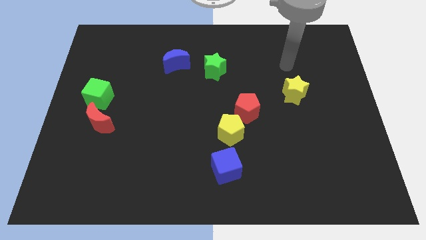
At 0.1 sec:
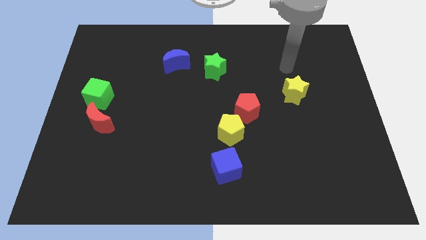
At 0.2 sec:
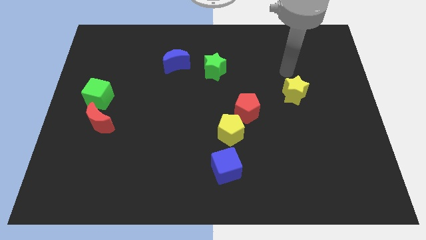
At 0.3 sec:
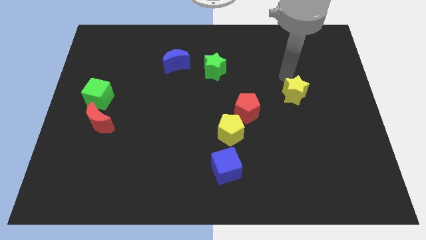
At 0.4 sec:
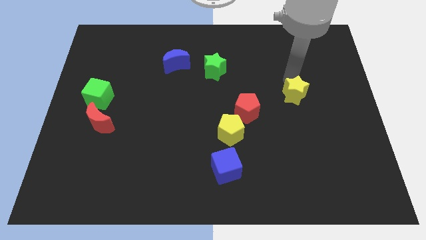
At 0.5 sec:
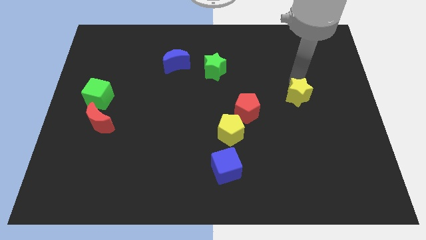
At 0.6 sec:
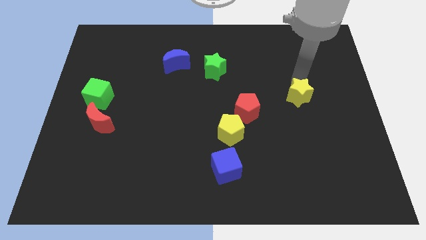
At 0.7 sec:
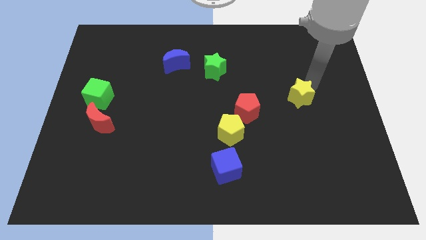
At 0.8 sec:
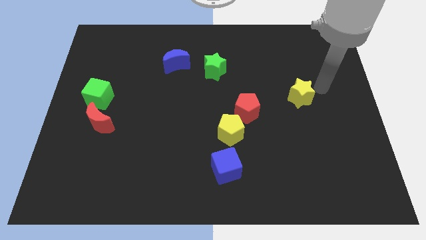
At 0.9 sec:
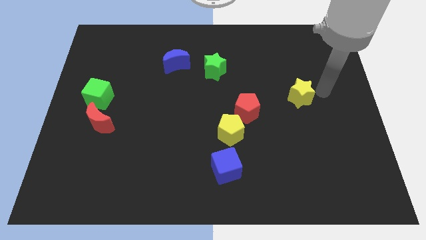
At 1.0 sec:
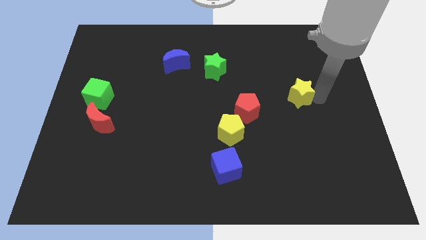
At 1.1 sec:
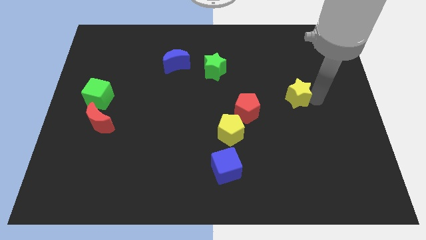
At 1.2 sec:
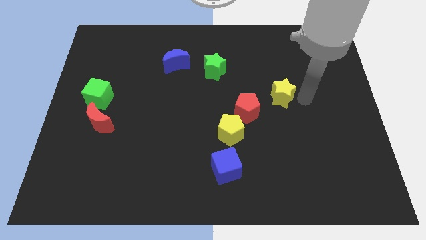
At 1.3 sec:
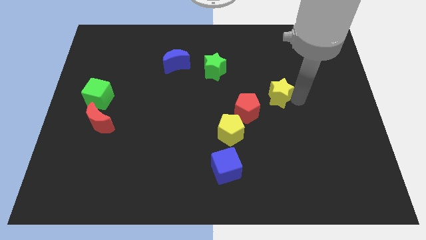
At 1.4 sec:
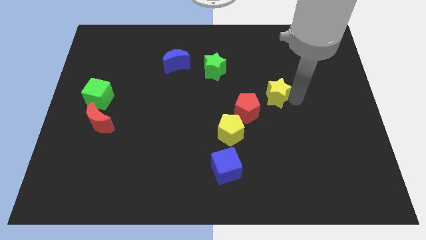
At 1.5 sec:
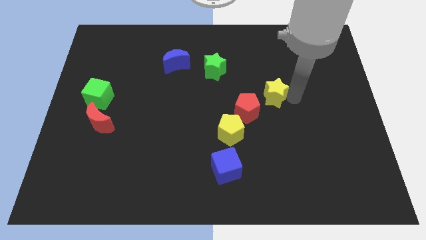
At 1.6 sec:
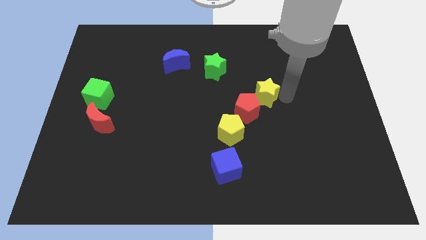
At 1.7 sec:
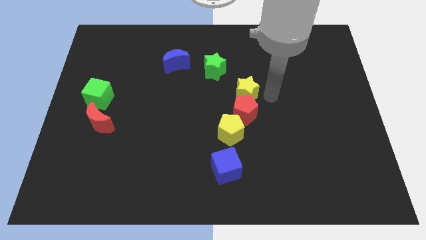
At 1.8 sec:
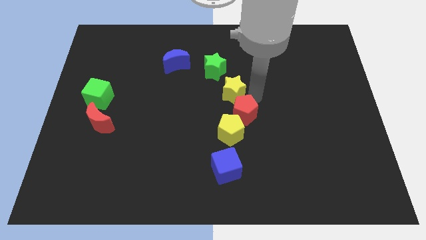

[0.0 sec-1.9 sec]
push the yellow star to the top of red pentagon

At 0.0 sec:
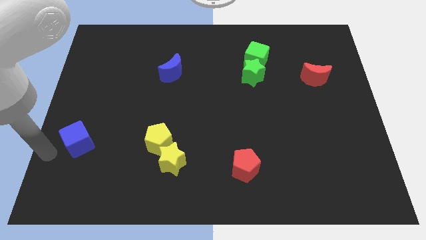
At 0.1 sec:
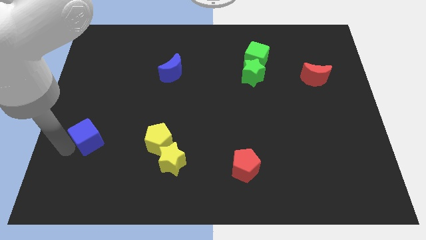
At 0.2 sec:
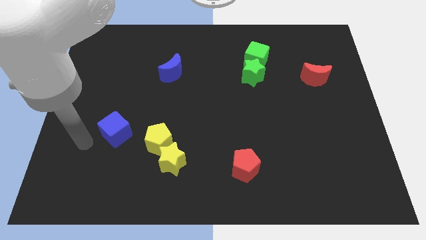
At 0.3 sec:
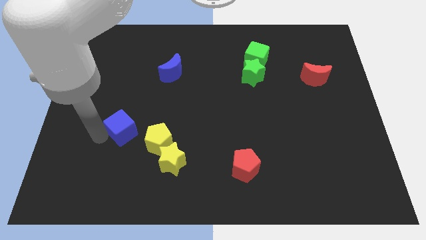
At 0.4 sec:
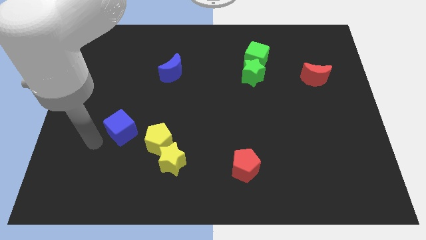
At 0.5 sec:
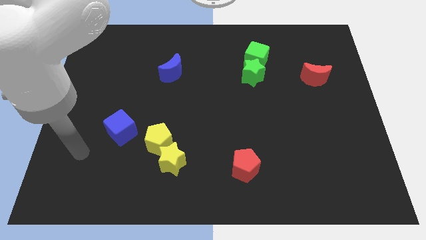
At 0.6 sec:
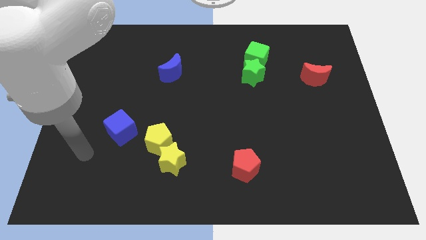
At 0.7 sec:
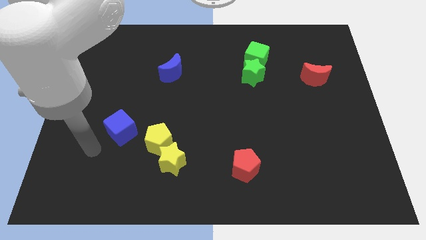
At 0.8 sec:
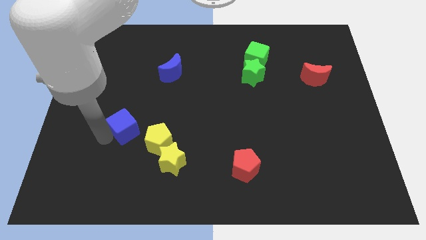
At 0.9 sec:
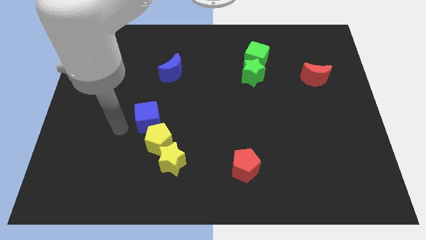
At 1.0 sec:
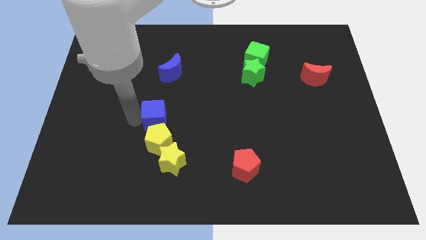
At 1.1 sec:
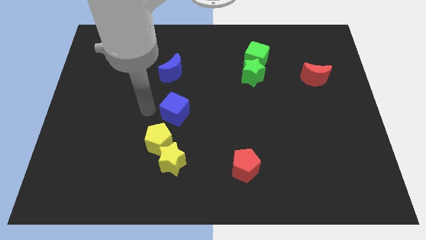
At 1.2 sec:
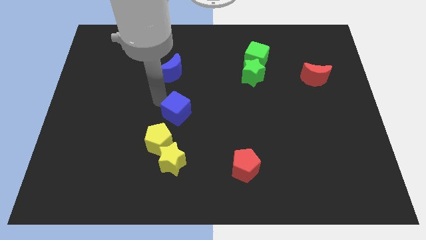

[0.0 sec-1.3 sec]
put the blue cube vertically below the blue moon

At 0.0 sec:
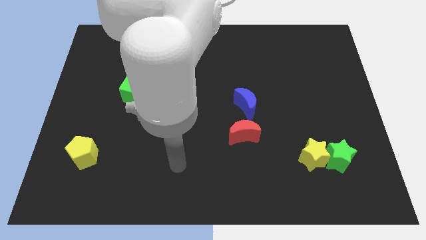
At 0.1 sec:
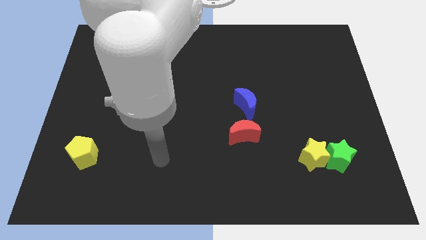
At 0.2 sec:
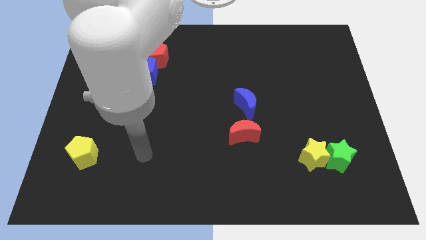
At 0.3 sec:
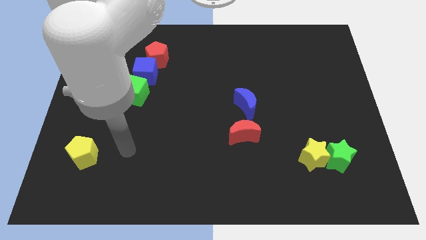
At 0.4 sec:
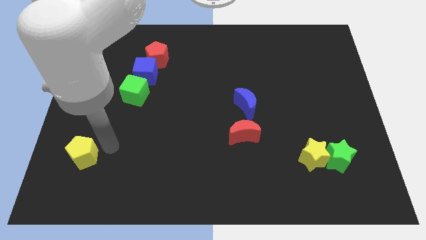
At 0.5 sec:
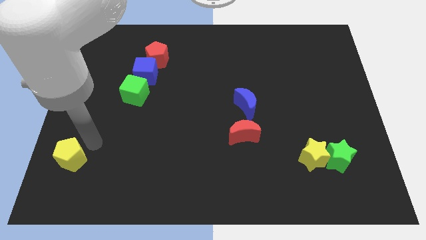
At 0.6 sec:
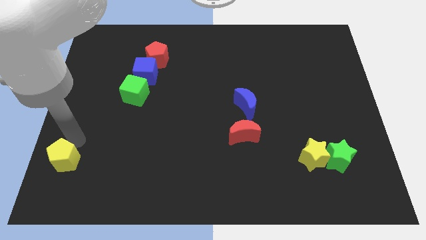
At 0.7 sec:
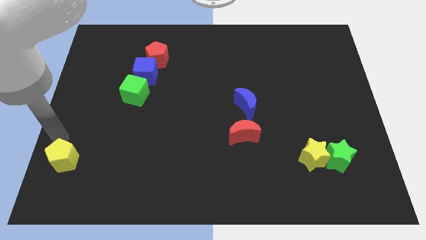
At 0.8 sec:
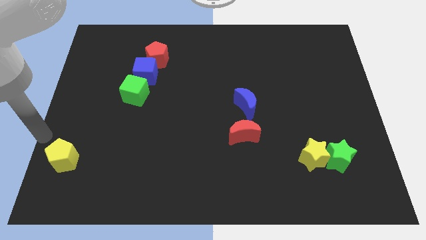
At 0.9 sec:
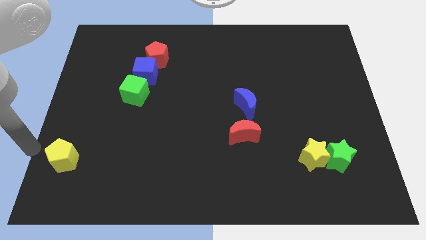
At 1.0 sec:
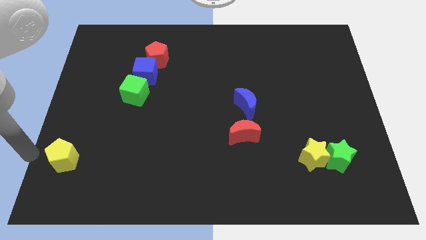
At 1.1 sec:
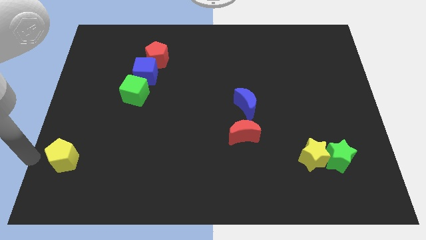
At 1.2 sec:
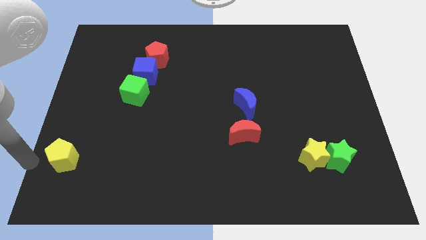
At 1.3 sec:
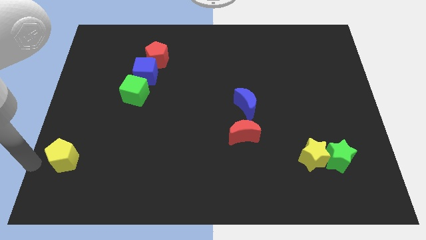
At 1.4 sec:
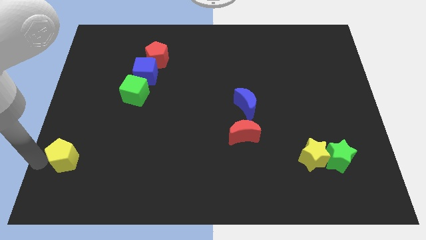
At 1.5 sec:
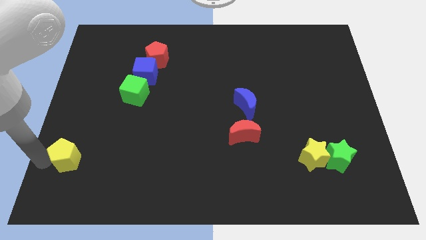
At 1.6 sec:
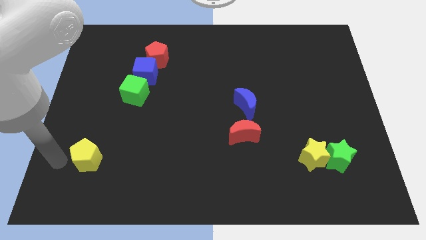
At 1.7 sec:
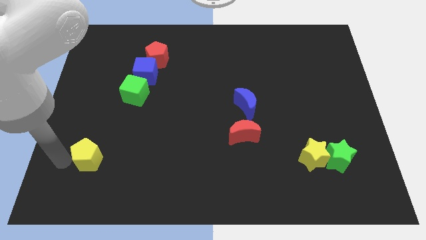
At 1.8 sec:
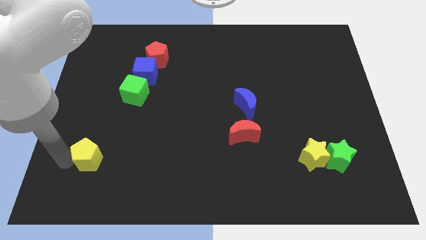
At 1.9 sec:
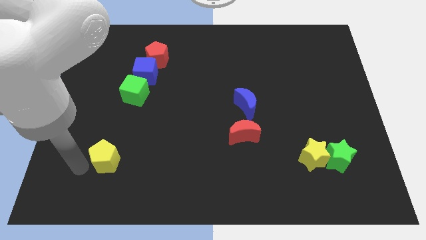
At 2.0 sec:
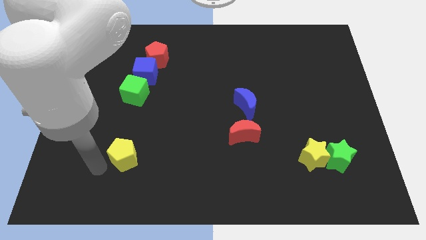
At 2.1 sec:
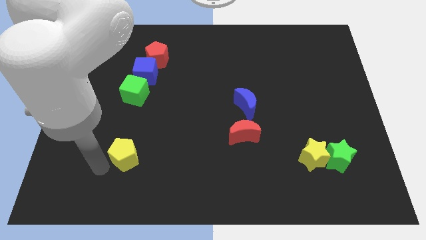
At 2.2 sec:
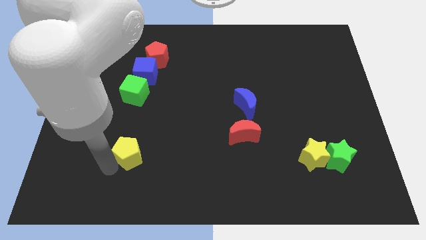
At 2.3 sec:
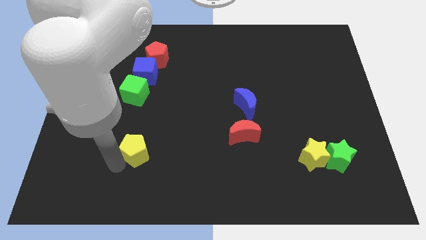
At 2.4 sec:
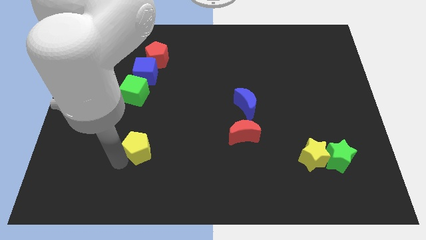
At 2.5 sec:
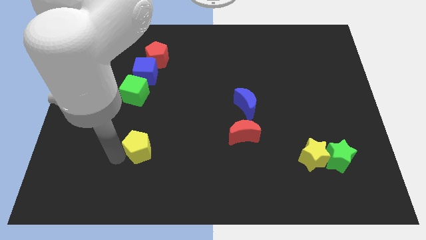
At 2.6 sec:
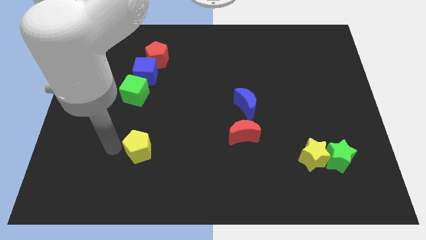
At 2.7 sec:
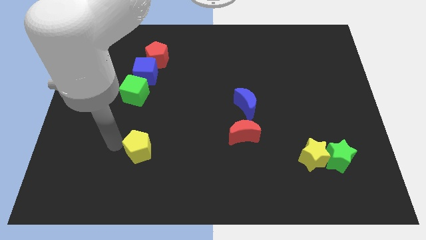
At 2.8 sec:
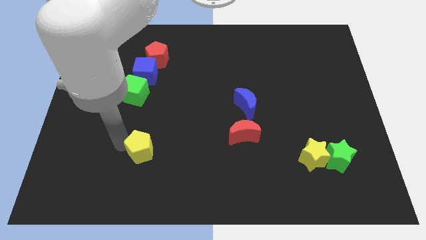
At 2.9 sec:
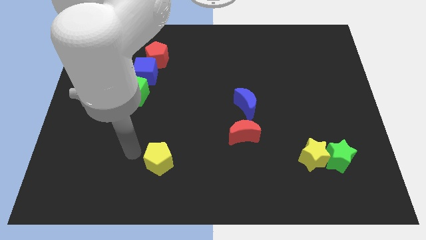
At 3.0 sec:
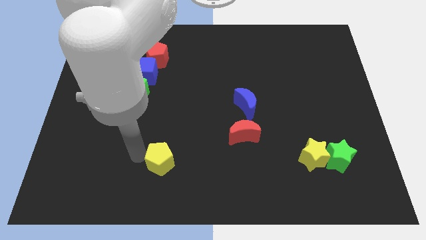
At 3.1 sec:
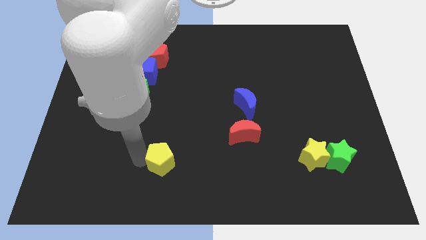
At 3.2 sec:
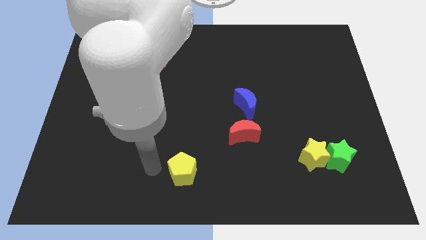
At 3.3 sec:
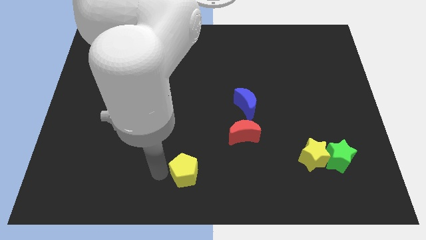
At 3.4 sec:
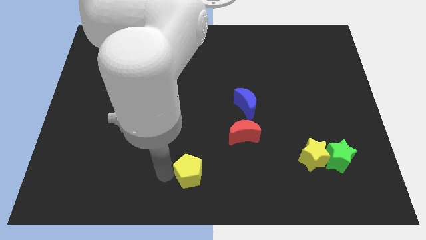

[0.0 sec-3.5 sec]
move yellow pentagon towards red moon

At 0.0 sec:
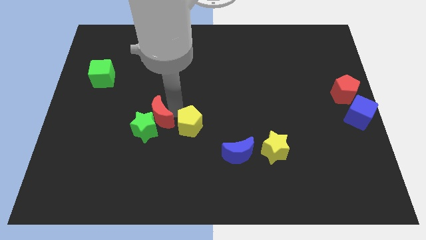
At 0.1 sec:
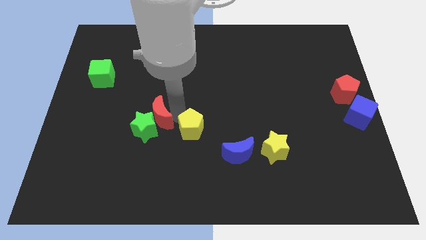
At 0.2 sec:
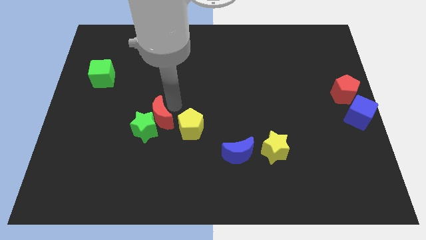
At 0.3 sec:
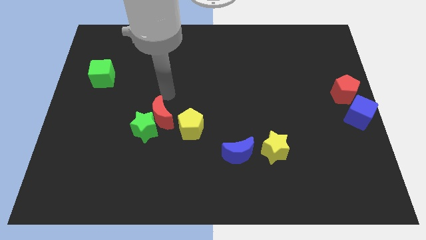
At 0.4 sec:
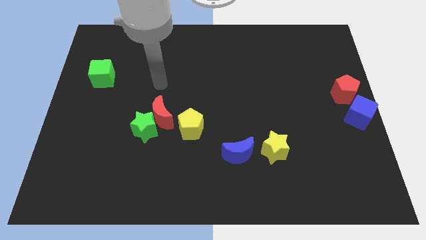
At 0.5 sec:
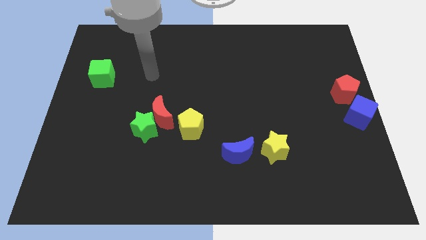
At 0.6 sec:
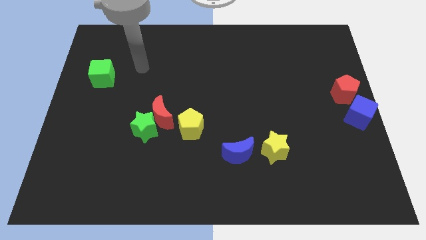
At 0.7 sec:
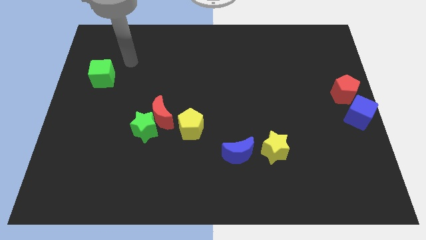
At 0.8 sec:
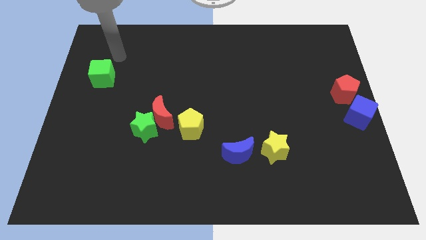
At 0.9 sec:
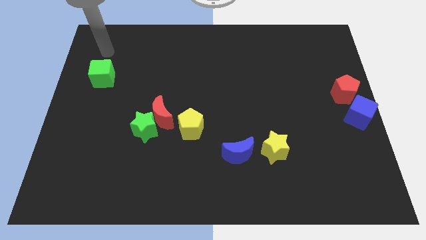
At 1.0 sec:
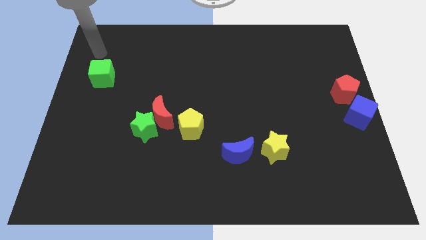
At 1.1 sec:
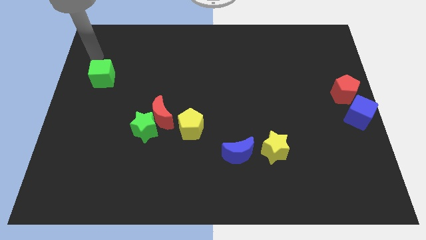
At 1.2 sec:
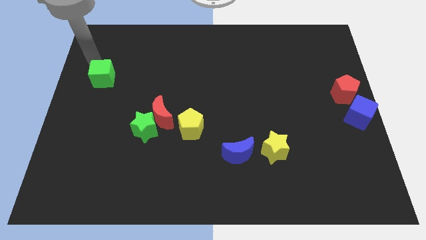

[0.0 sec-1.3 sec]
place your arm on the top of the green cube

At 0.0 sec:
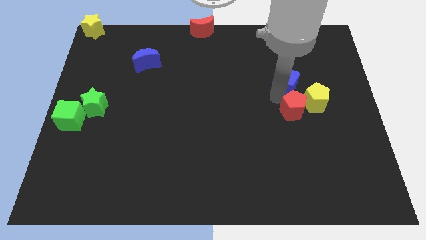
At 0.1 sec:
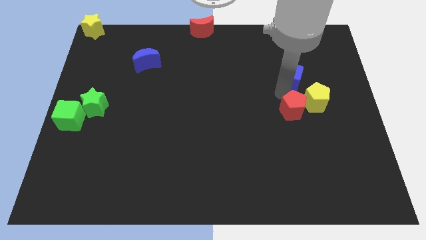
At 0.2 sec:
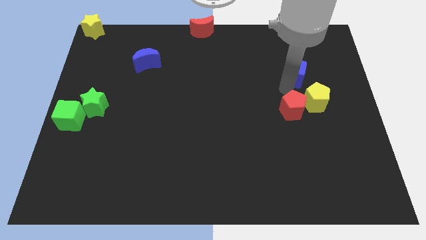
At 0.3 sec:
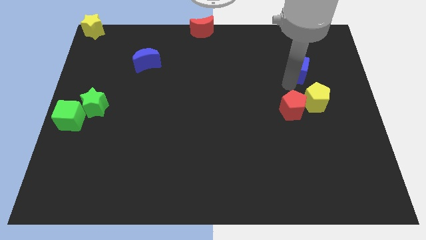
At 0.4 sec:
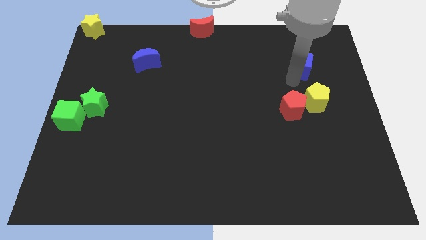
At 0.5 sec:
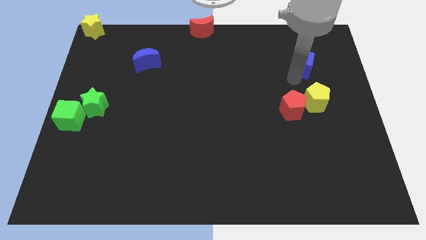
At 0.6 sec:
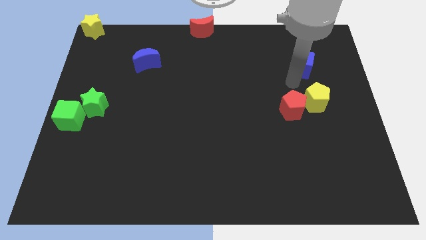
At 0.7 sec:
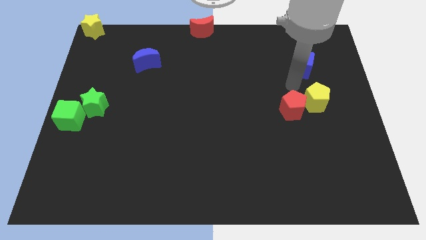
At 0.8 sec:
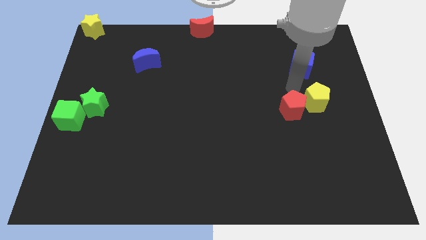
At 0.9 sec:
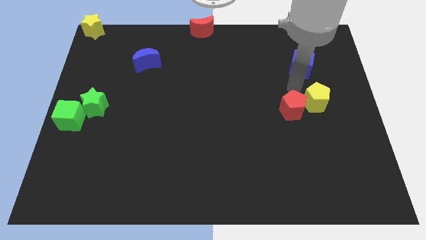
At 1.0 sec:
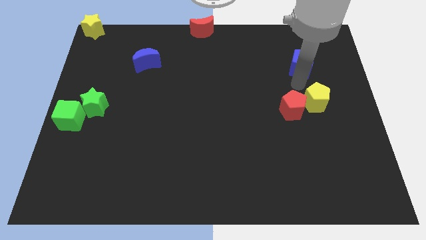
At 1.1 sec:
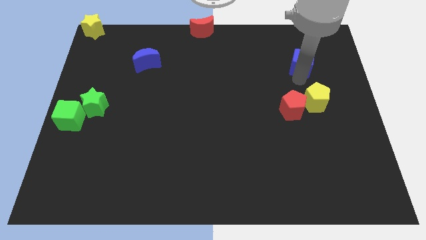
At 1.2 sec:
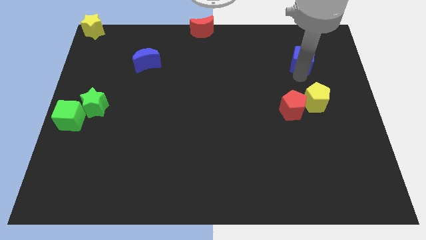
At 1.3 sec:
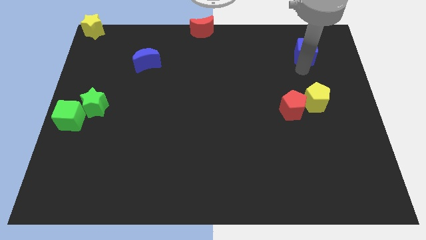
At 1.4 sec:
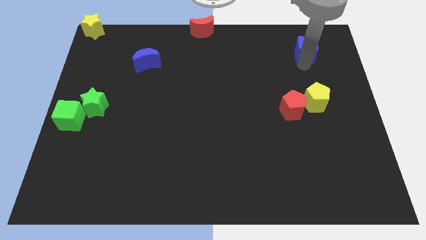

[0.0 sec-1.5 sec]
slightly push the blue cube to the top right
